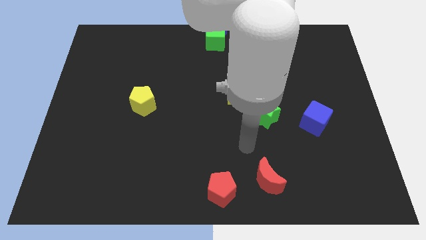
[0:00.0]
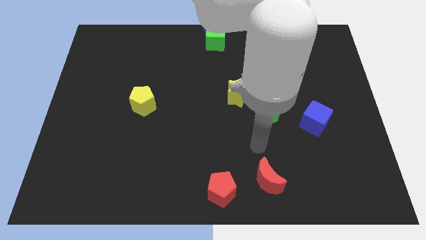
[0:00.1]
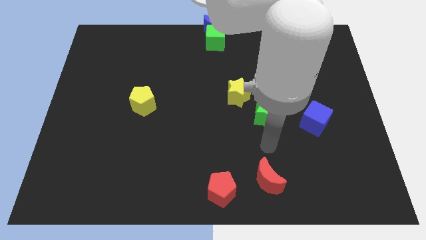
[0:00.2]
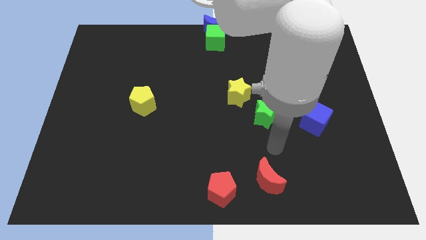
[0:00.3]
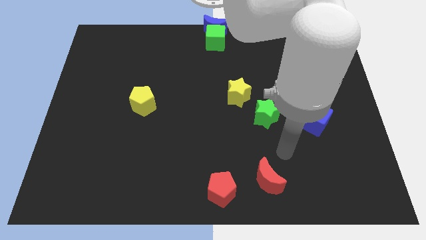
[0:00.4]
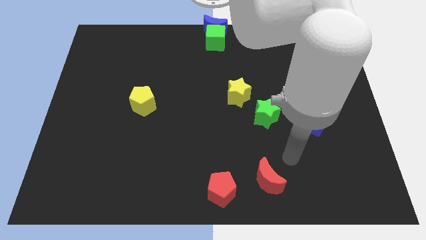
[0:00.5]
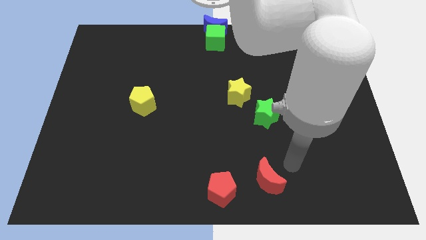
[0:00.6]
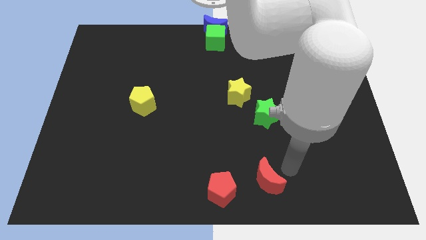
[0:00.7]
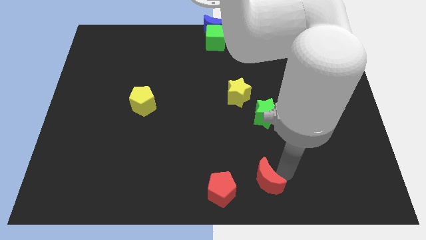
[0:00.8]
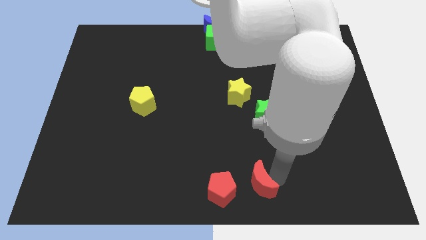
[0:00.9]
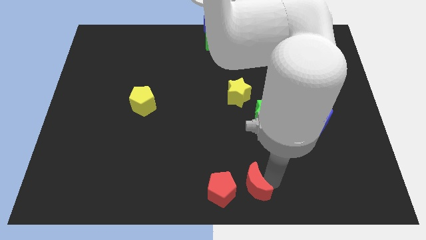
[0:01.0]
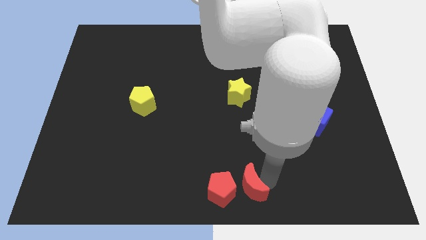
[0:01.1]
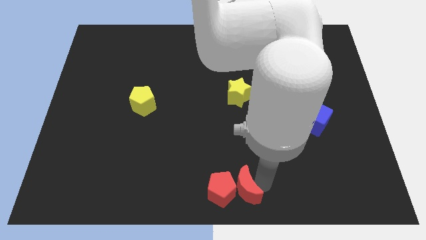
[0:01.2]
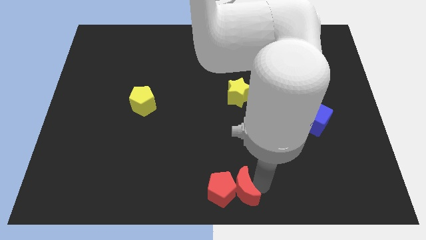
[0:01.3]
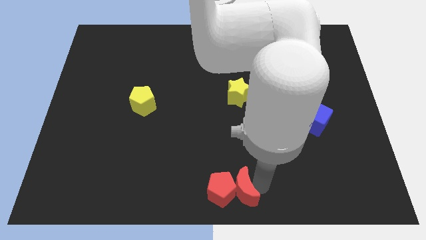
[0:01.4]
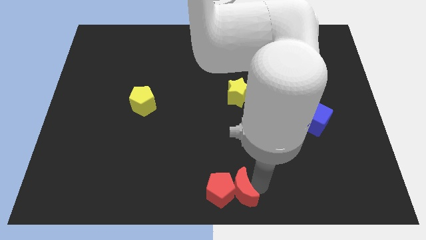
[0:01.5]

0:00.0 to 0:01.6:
put red blocks together

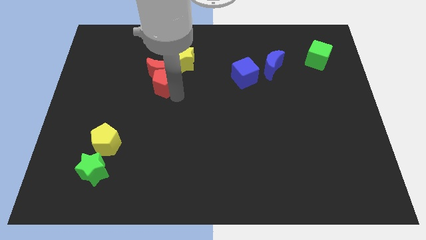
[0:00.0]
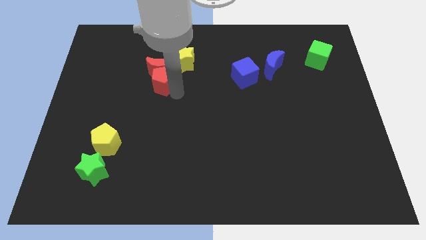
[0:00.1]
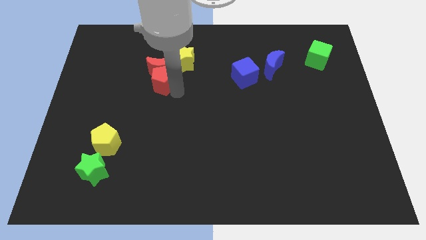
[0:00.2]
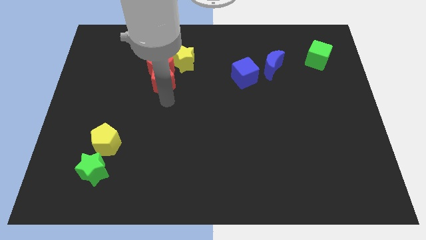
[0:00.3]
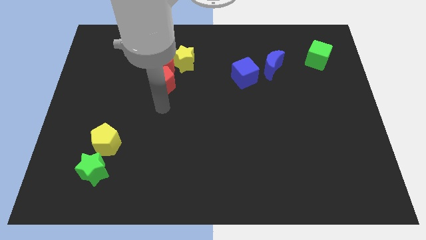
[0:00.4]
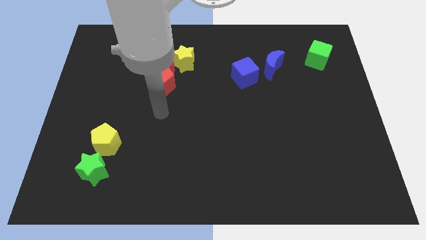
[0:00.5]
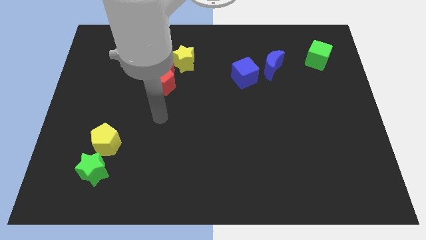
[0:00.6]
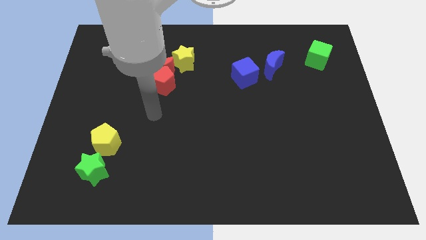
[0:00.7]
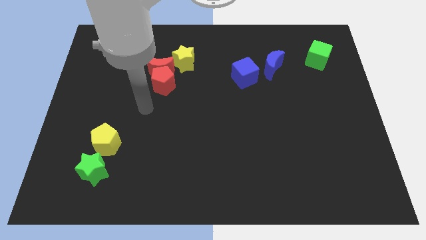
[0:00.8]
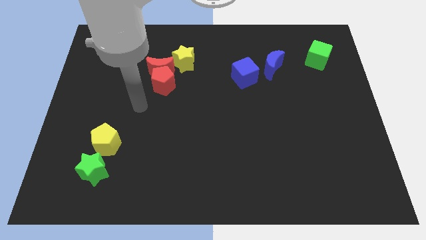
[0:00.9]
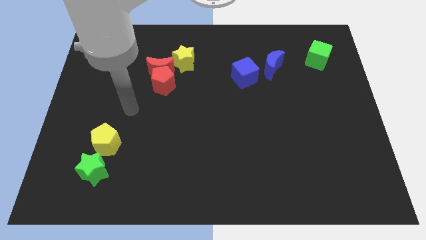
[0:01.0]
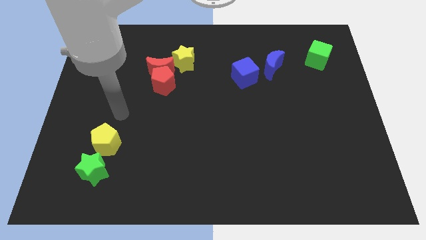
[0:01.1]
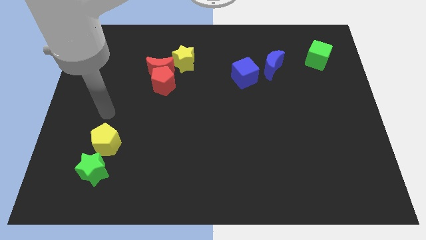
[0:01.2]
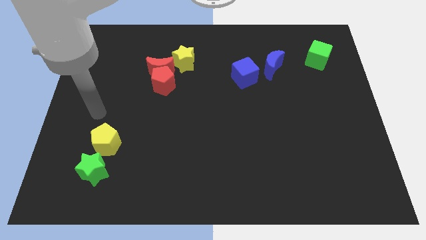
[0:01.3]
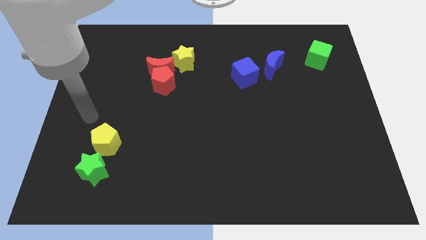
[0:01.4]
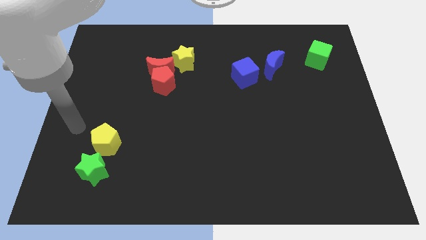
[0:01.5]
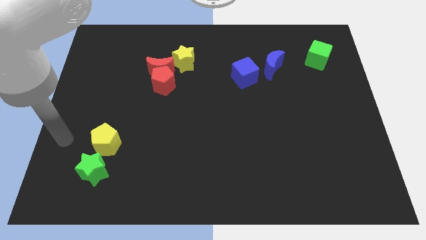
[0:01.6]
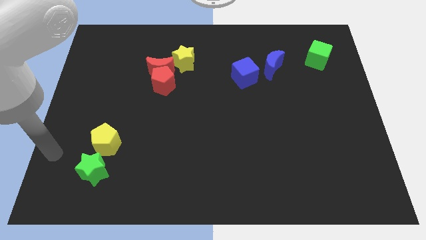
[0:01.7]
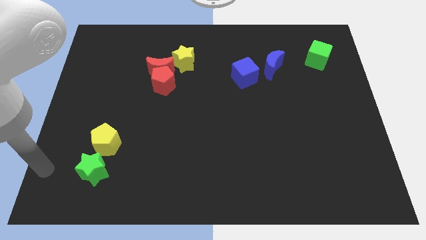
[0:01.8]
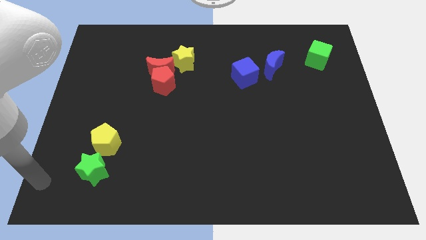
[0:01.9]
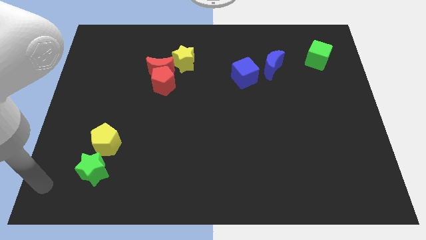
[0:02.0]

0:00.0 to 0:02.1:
slide your hand to the left of green star

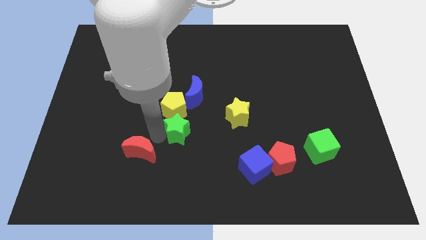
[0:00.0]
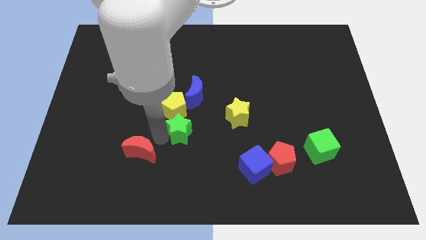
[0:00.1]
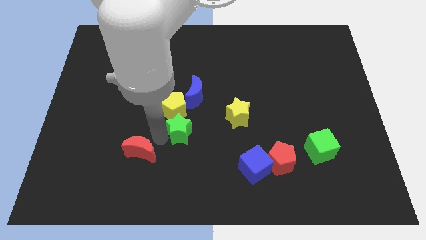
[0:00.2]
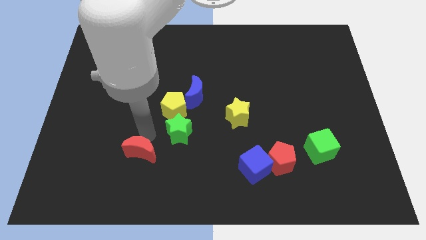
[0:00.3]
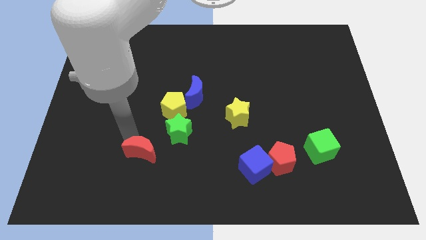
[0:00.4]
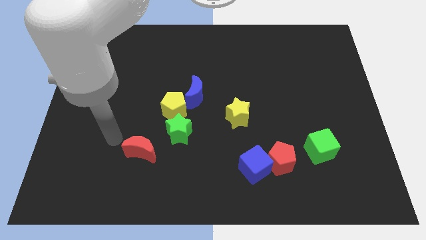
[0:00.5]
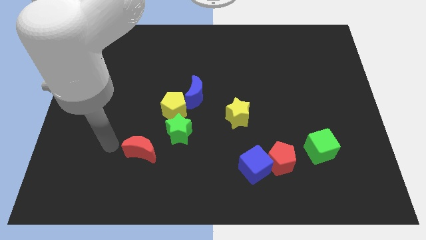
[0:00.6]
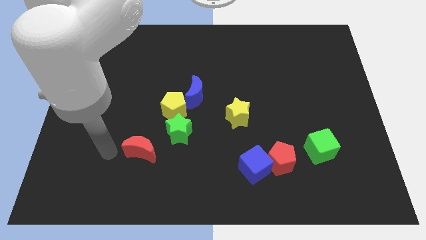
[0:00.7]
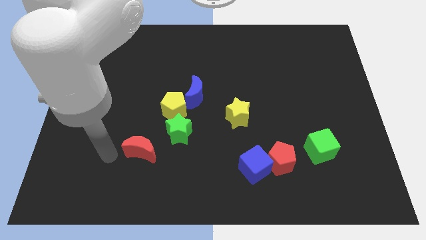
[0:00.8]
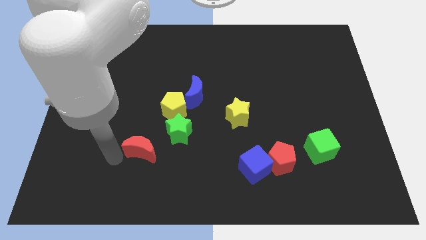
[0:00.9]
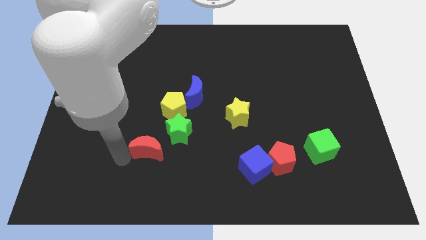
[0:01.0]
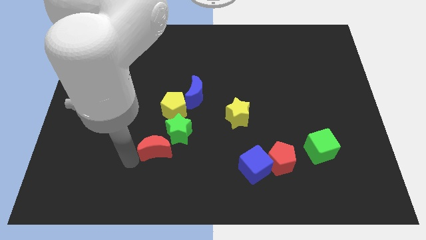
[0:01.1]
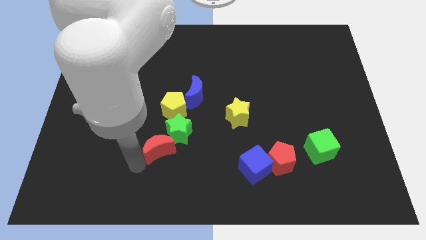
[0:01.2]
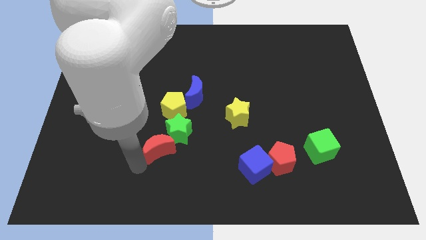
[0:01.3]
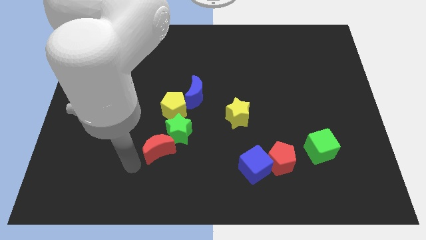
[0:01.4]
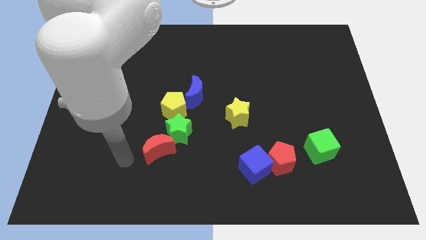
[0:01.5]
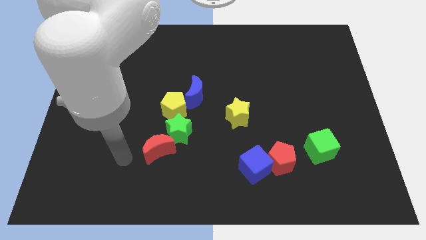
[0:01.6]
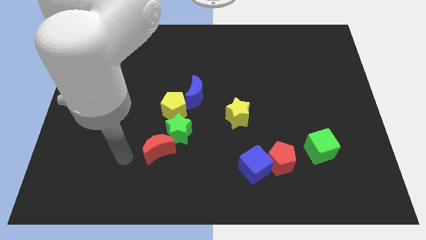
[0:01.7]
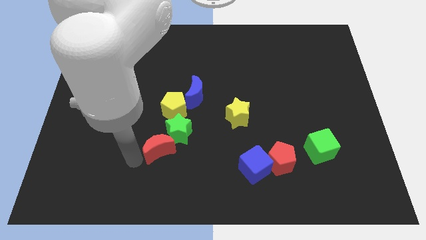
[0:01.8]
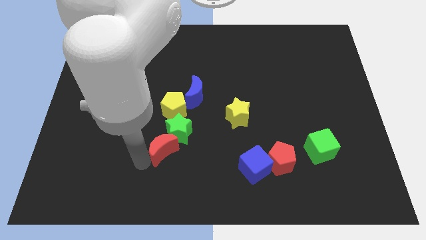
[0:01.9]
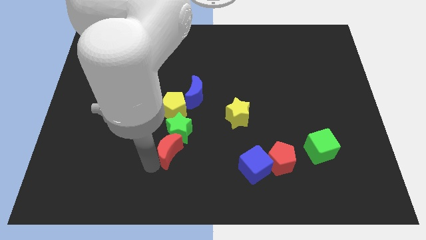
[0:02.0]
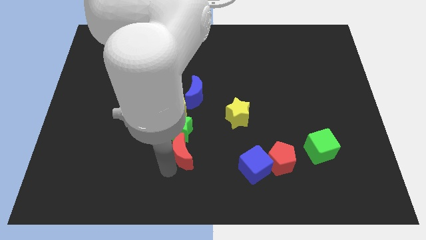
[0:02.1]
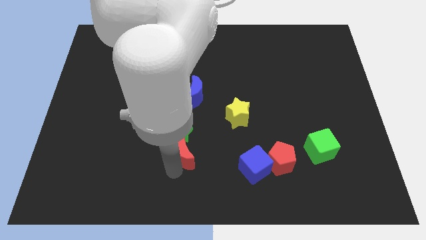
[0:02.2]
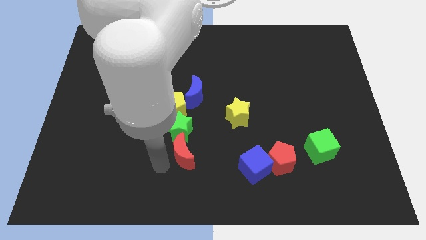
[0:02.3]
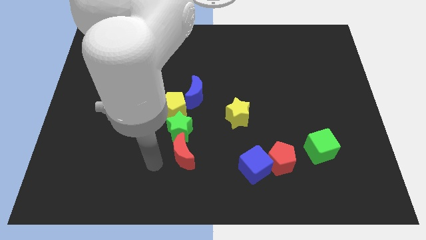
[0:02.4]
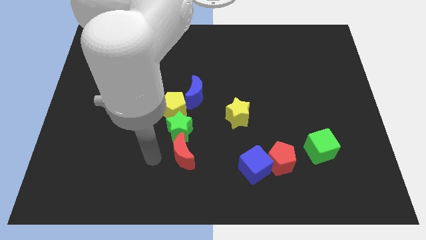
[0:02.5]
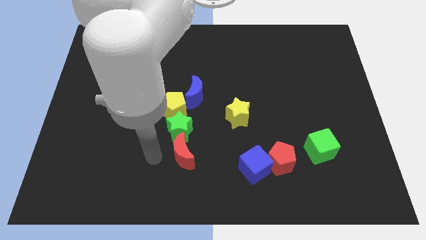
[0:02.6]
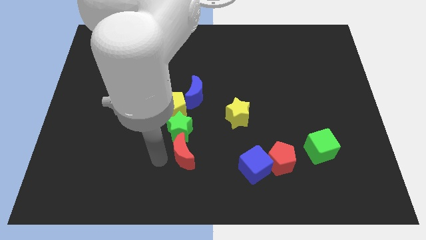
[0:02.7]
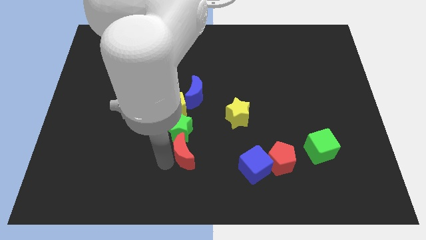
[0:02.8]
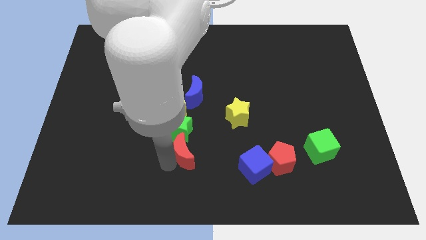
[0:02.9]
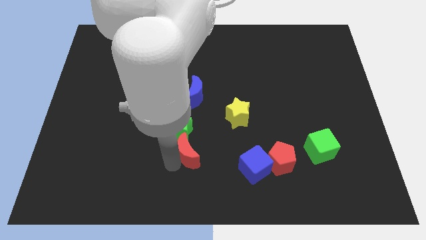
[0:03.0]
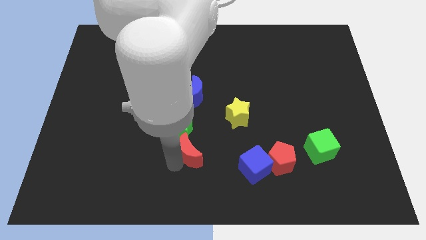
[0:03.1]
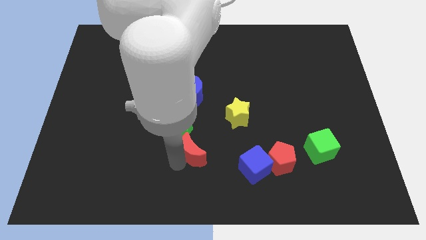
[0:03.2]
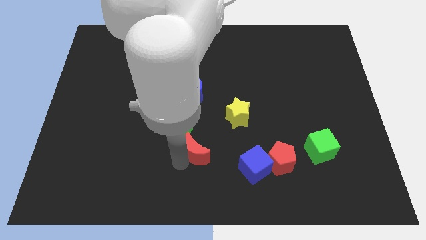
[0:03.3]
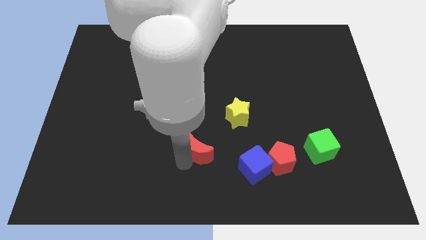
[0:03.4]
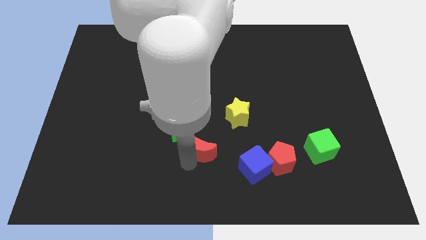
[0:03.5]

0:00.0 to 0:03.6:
place the red moon diagonal to the green star

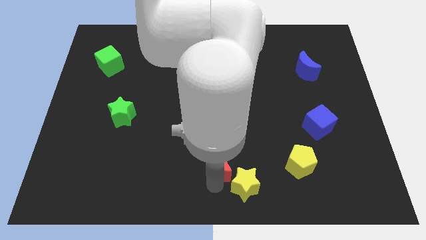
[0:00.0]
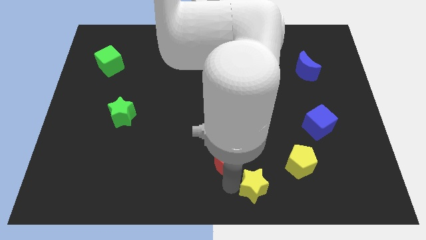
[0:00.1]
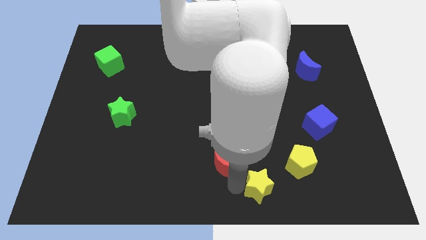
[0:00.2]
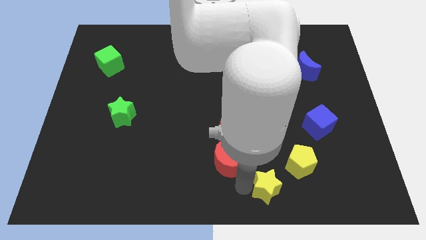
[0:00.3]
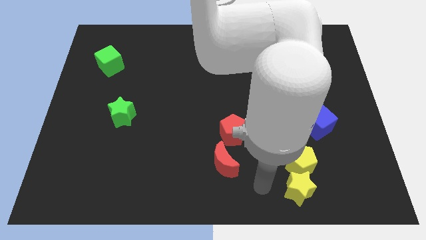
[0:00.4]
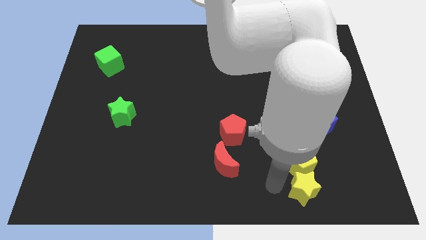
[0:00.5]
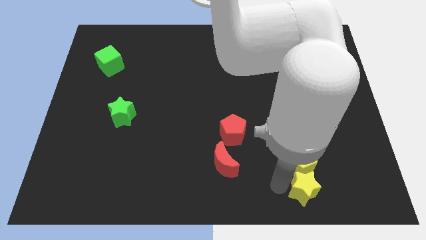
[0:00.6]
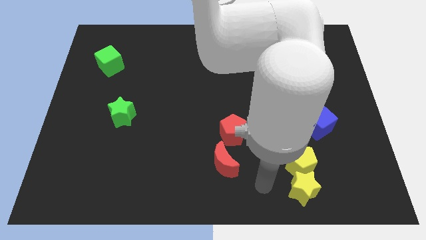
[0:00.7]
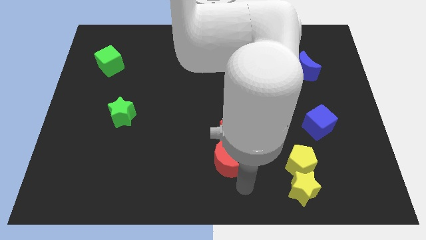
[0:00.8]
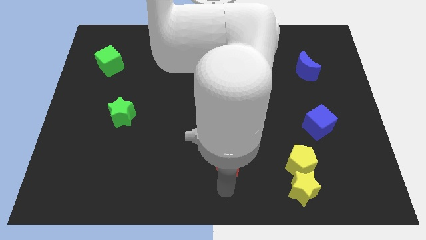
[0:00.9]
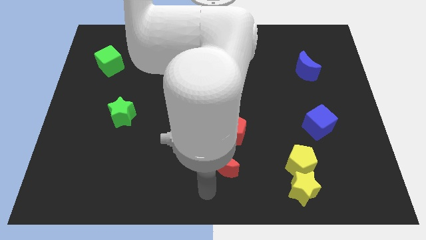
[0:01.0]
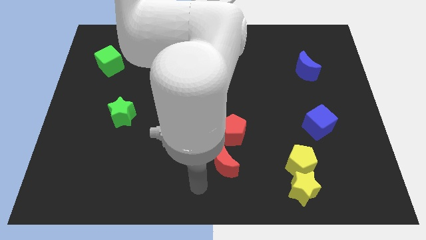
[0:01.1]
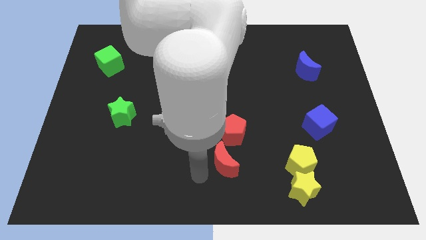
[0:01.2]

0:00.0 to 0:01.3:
place the yellow star below the yellow pentagon

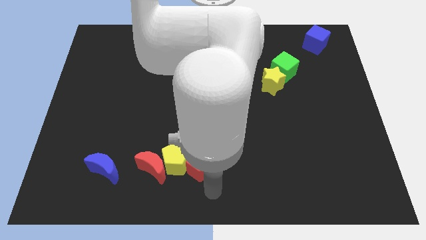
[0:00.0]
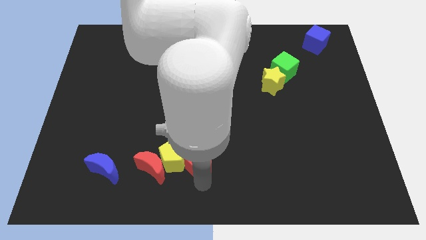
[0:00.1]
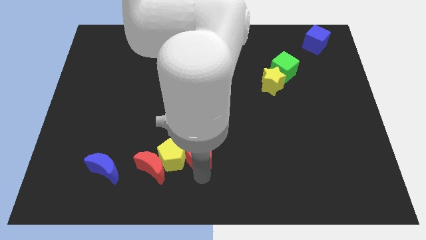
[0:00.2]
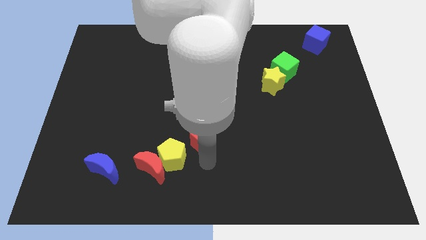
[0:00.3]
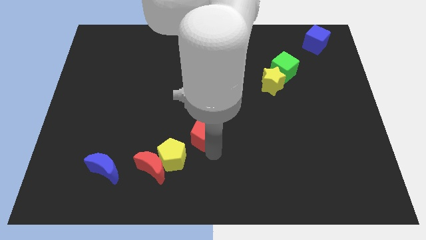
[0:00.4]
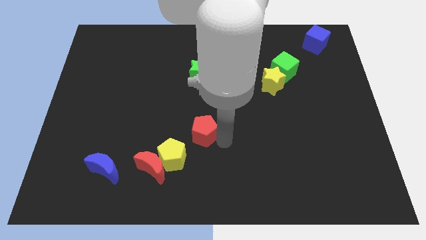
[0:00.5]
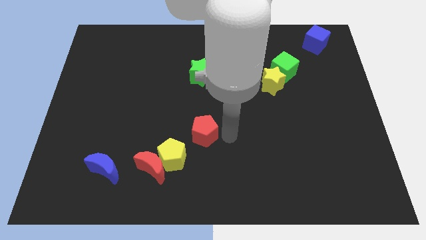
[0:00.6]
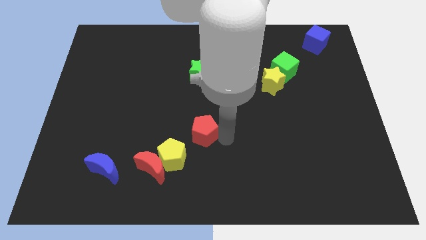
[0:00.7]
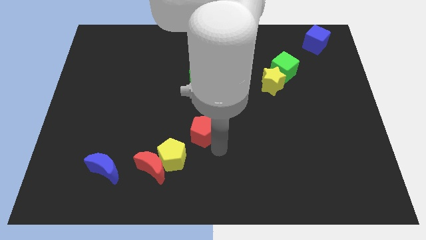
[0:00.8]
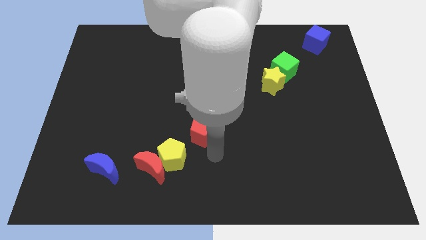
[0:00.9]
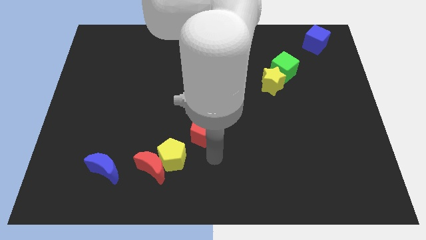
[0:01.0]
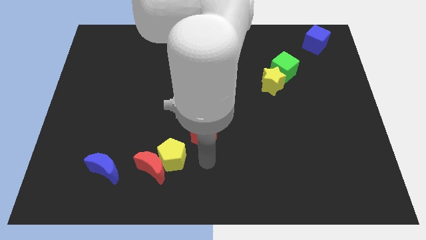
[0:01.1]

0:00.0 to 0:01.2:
separate the yellow pentagon and red pentagon
